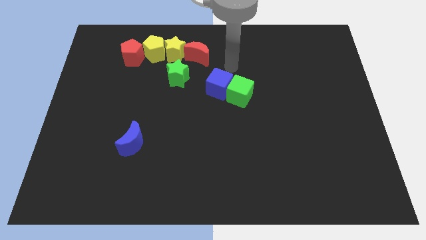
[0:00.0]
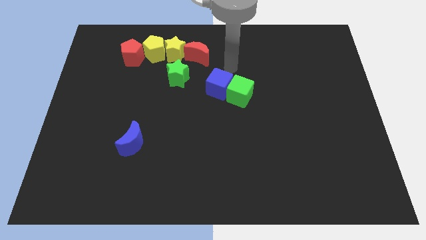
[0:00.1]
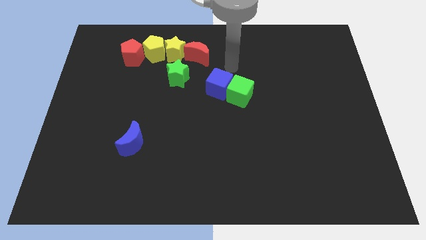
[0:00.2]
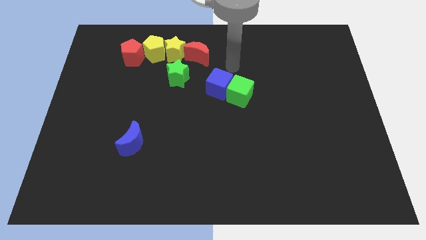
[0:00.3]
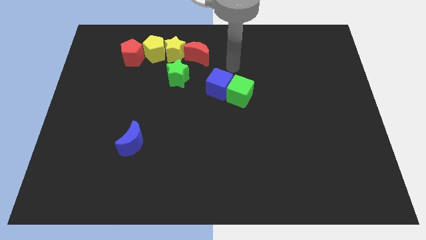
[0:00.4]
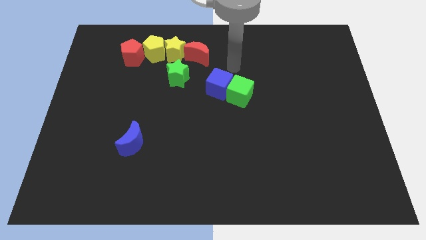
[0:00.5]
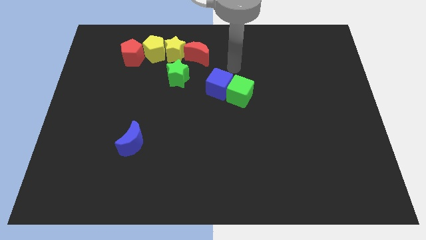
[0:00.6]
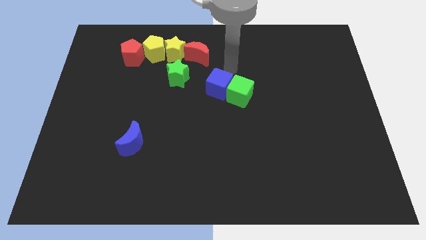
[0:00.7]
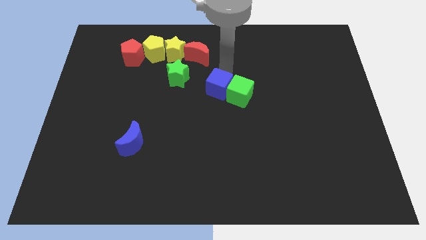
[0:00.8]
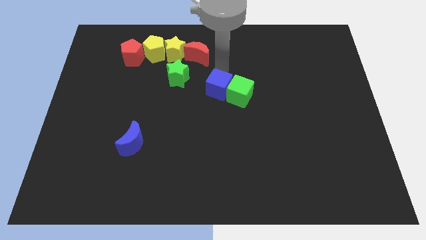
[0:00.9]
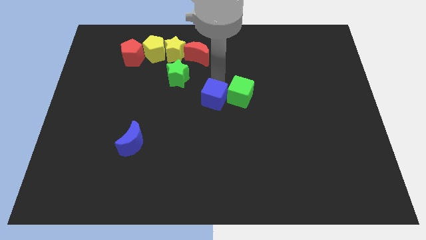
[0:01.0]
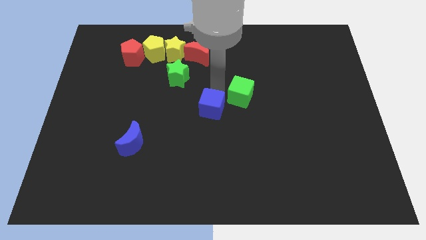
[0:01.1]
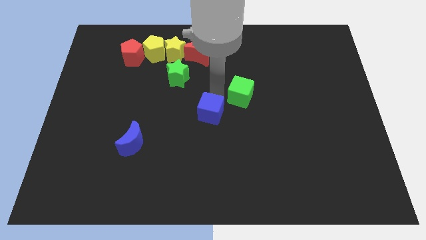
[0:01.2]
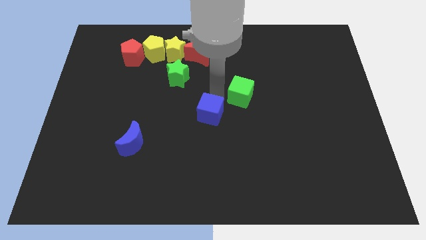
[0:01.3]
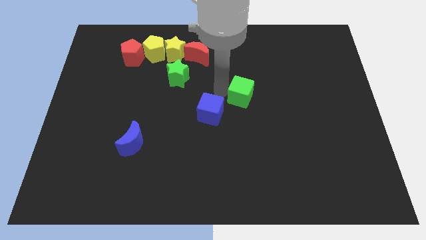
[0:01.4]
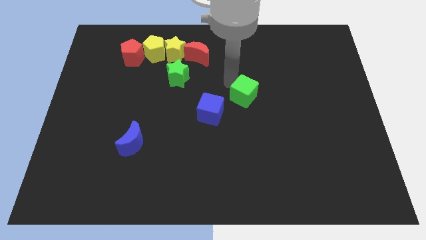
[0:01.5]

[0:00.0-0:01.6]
push the blue cube downwards

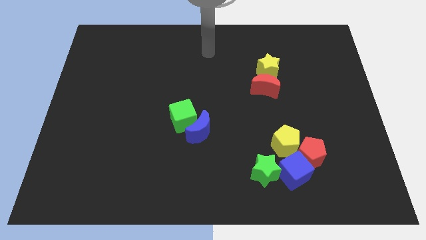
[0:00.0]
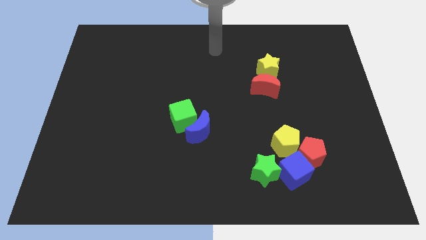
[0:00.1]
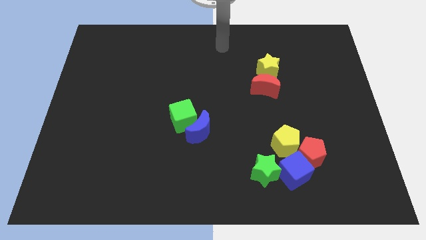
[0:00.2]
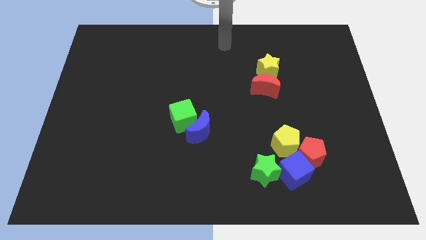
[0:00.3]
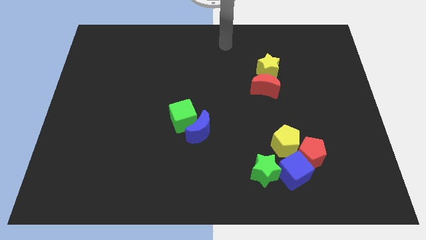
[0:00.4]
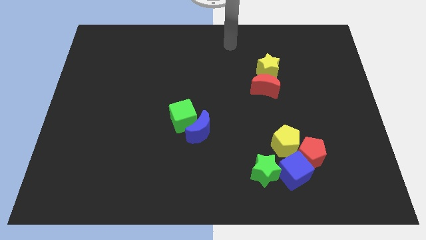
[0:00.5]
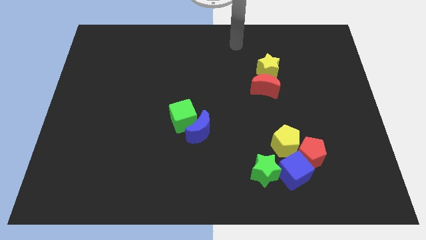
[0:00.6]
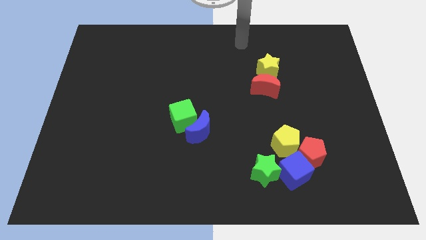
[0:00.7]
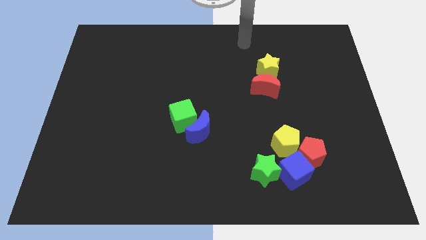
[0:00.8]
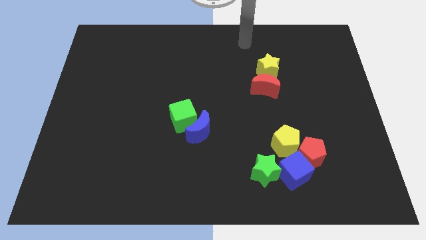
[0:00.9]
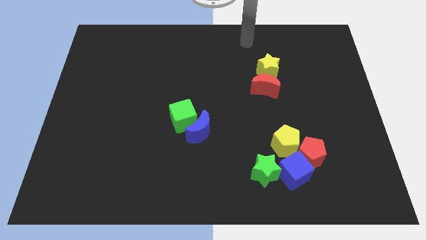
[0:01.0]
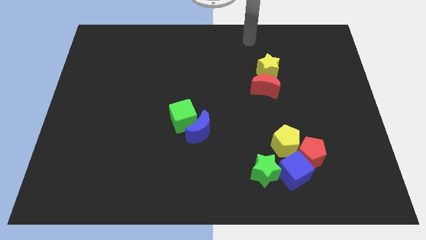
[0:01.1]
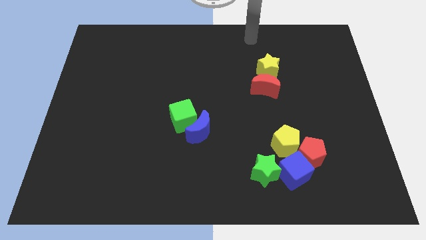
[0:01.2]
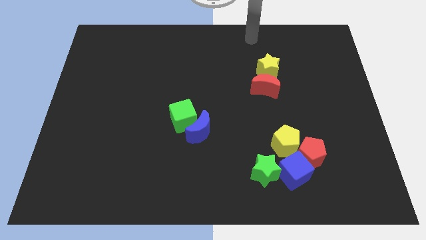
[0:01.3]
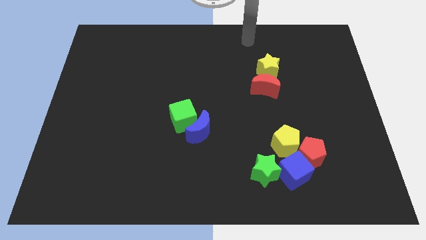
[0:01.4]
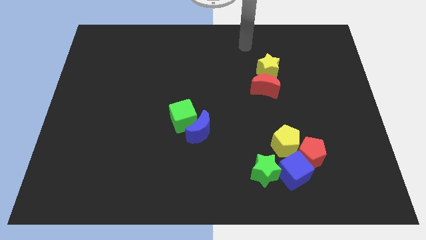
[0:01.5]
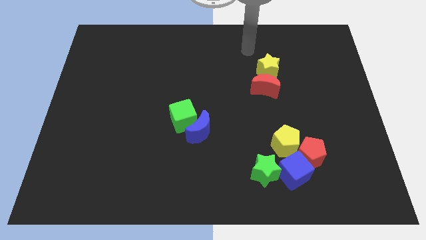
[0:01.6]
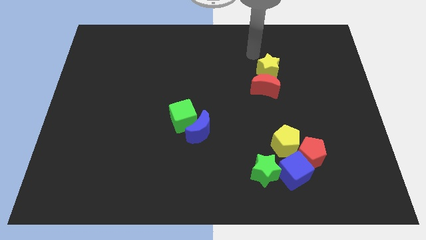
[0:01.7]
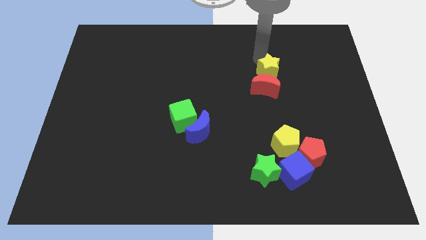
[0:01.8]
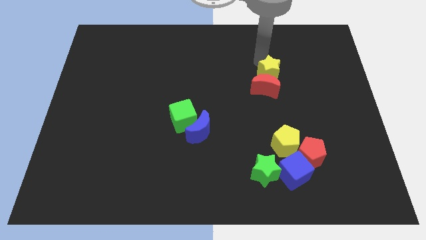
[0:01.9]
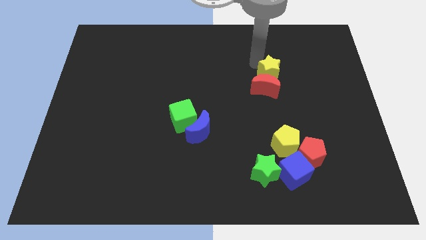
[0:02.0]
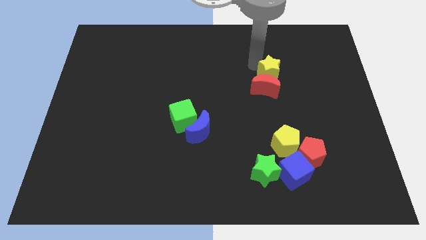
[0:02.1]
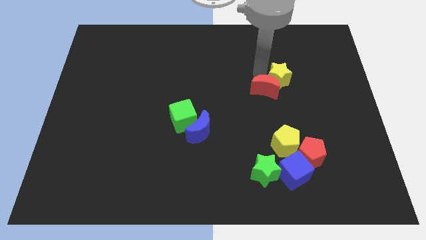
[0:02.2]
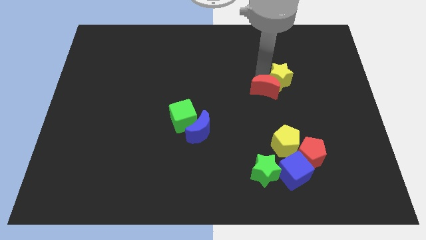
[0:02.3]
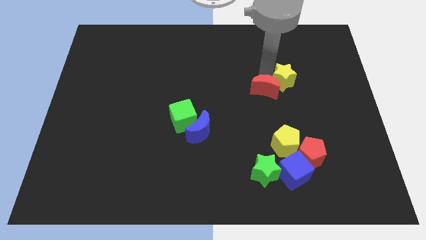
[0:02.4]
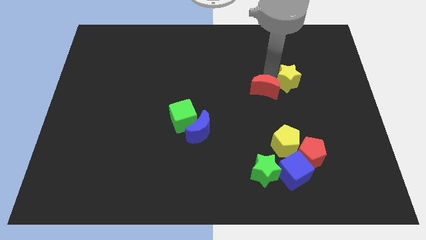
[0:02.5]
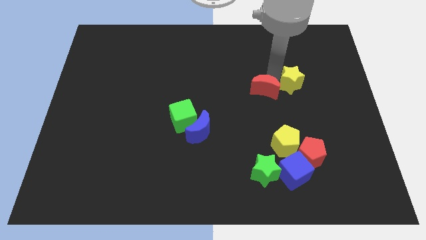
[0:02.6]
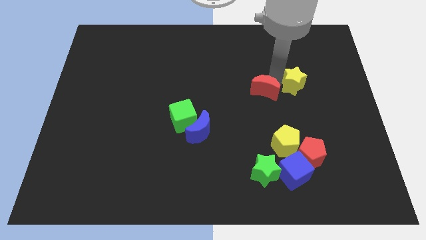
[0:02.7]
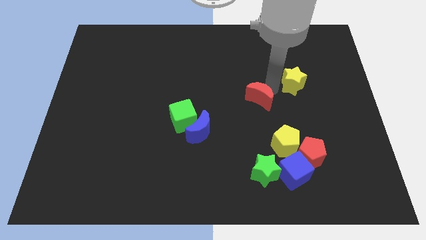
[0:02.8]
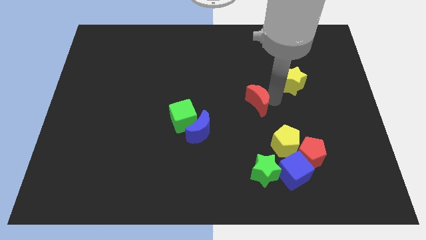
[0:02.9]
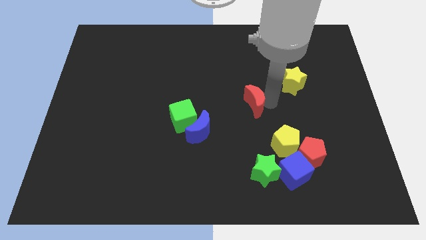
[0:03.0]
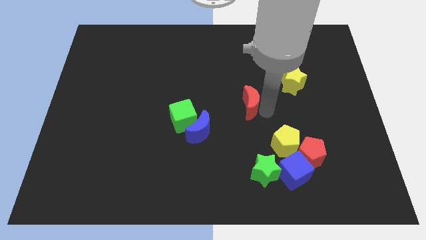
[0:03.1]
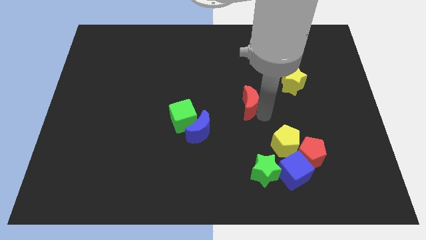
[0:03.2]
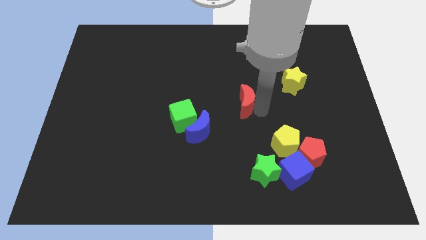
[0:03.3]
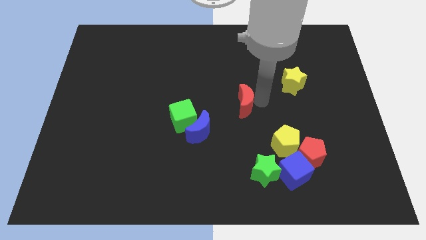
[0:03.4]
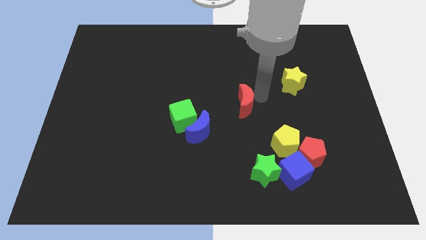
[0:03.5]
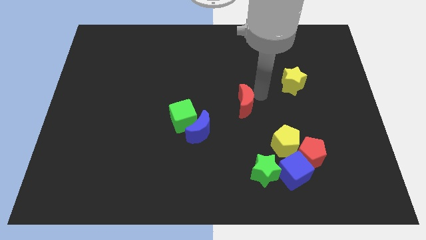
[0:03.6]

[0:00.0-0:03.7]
separate red moon and yellow star

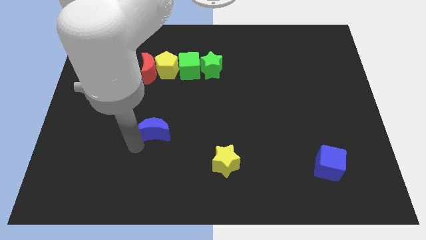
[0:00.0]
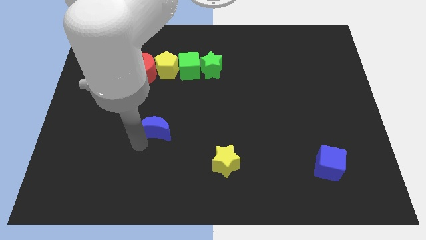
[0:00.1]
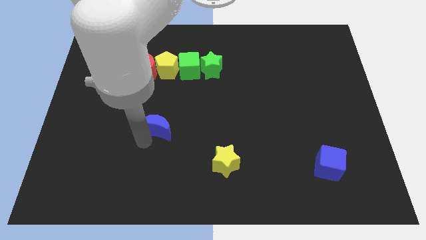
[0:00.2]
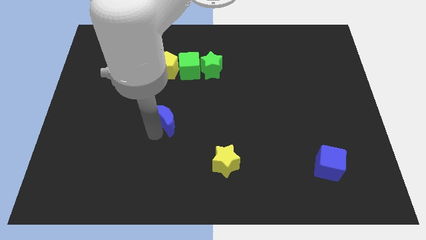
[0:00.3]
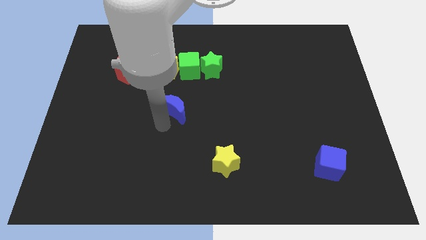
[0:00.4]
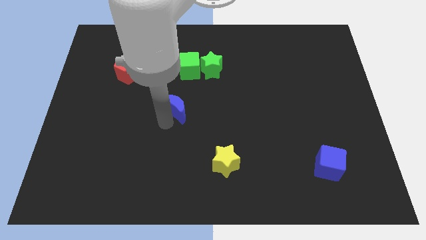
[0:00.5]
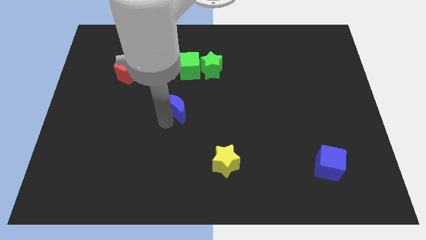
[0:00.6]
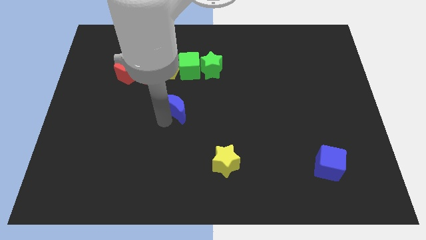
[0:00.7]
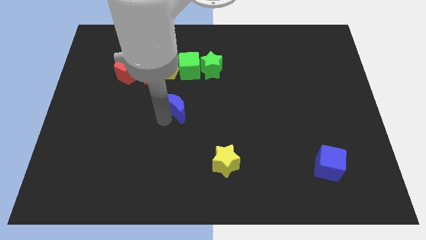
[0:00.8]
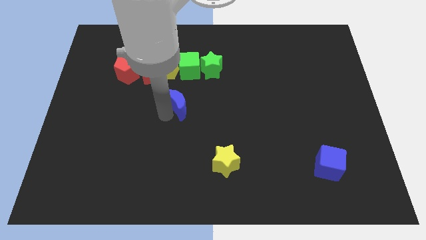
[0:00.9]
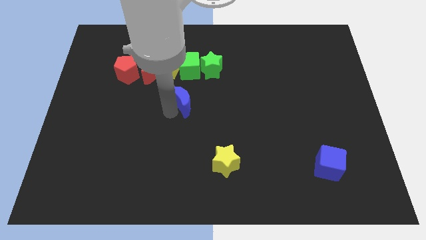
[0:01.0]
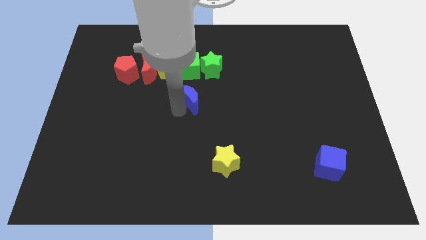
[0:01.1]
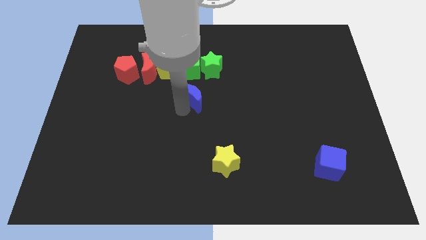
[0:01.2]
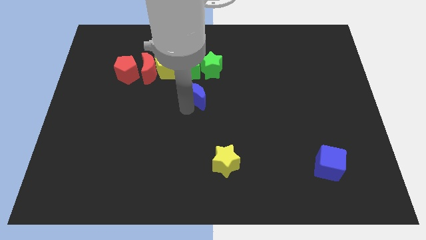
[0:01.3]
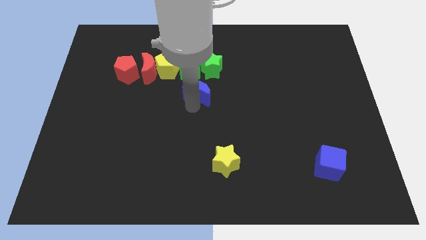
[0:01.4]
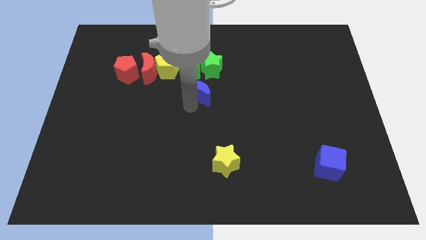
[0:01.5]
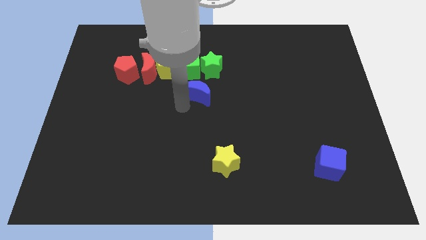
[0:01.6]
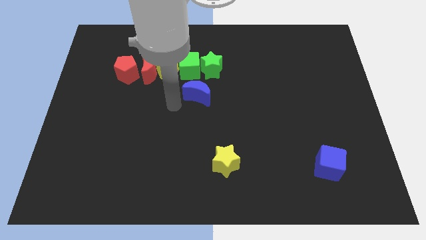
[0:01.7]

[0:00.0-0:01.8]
put the blue crescent at the bottom side of the green blocks

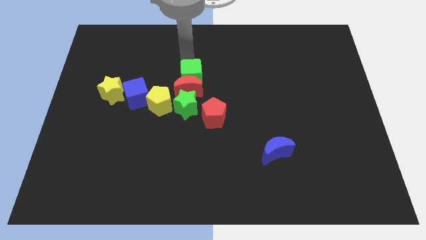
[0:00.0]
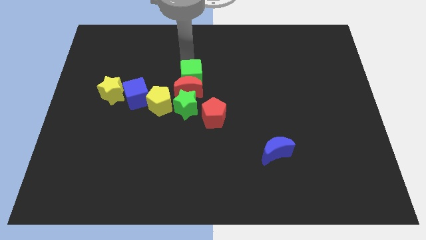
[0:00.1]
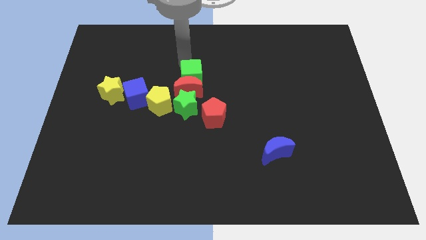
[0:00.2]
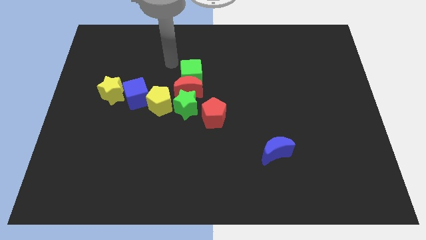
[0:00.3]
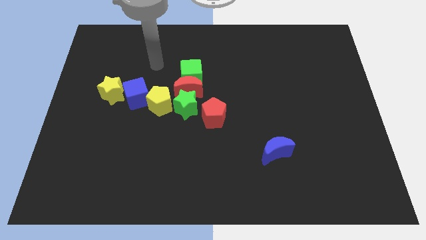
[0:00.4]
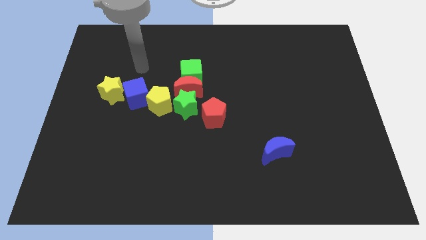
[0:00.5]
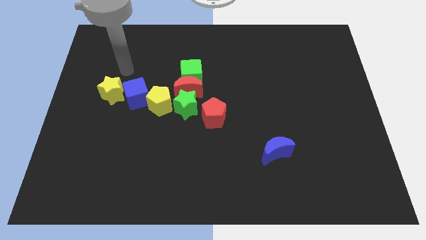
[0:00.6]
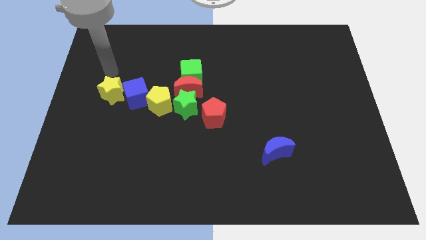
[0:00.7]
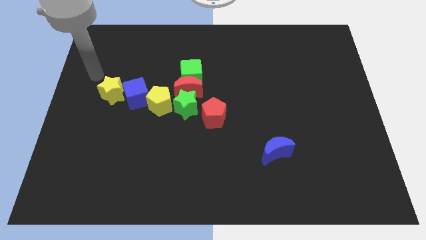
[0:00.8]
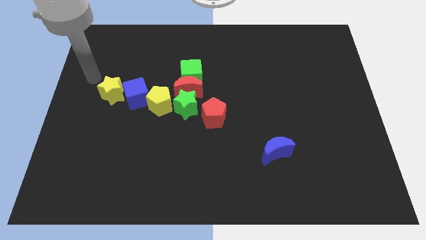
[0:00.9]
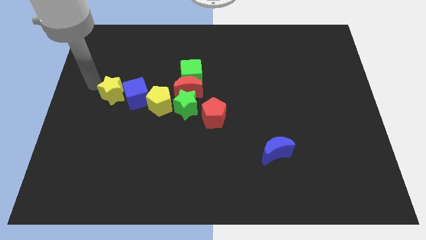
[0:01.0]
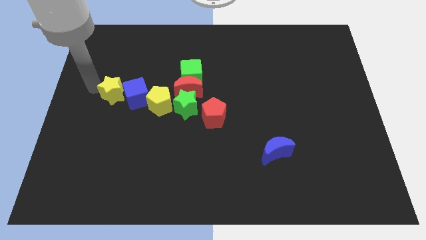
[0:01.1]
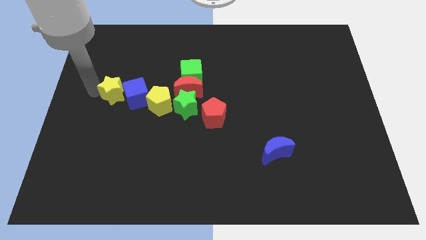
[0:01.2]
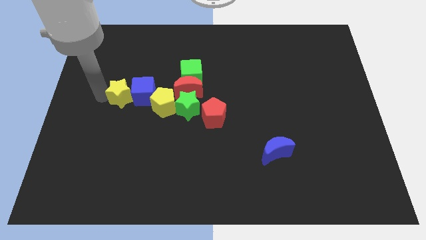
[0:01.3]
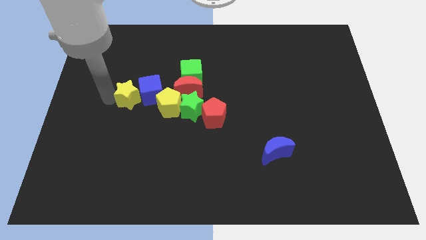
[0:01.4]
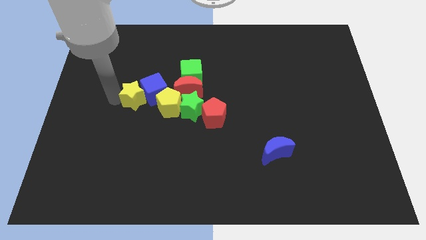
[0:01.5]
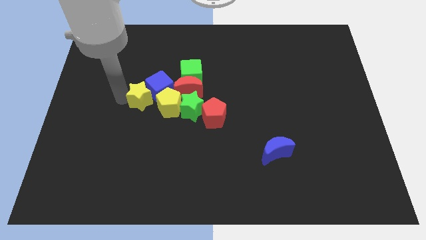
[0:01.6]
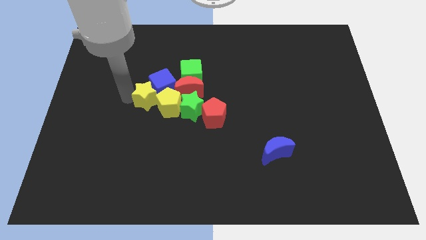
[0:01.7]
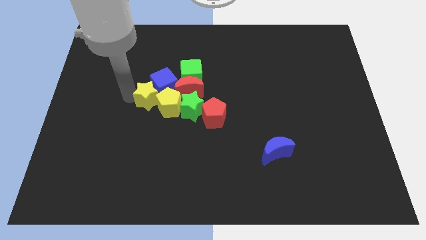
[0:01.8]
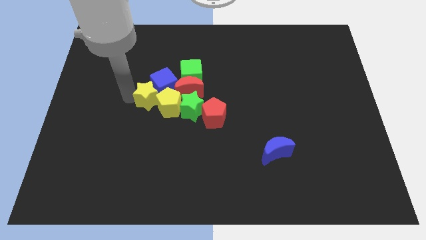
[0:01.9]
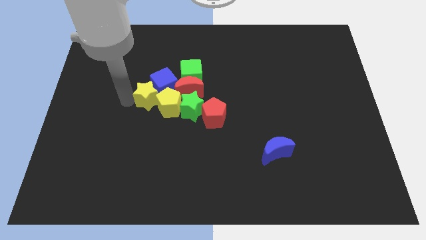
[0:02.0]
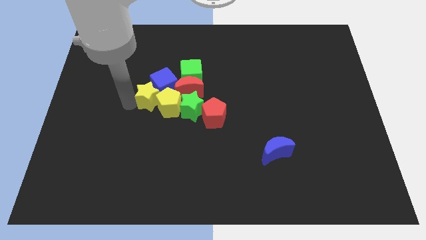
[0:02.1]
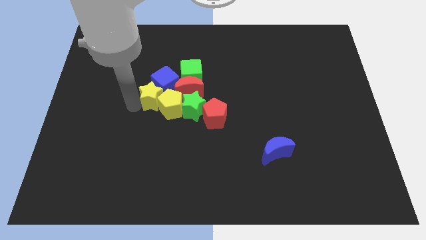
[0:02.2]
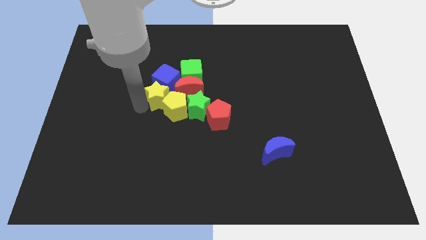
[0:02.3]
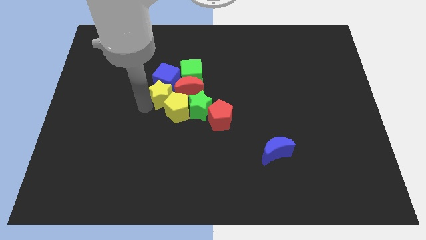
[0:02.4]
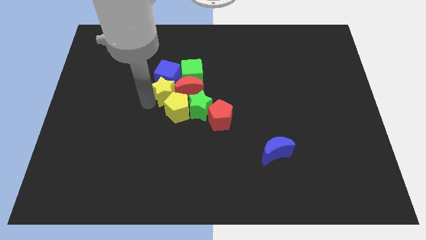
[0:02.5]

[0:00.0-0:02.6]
push the yellow star below the blue cube
